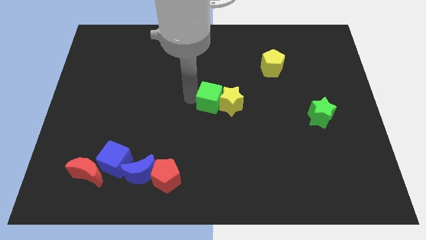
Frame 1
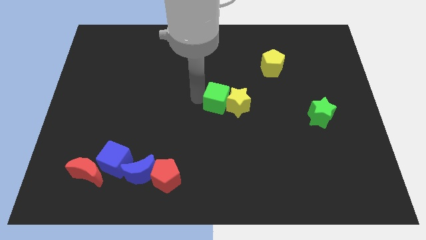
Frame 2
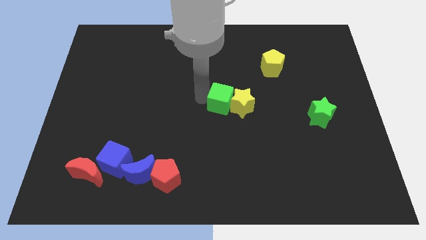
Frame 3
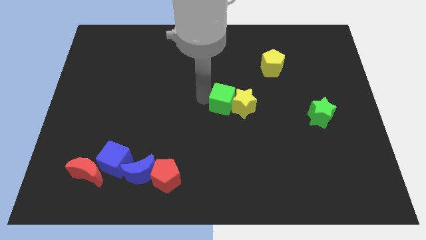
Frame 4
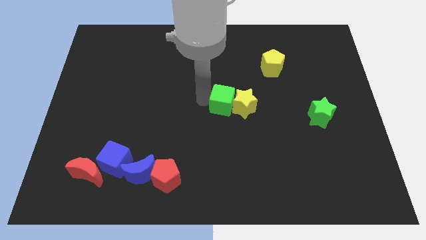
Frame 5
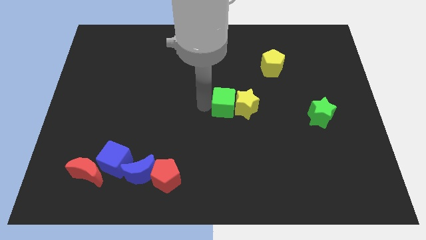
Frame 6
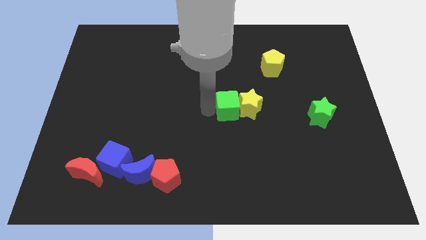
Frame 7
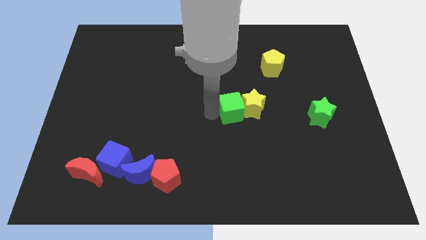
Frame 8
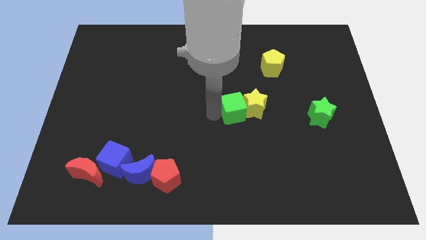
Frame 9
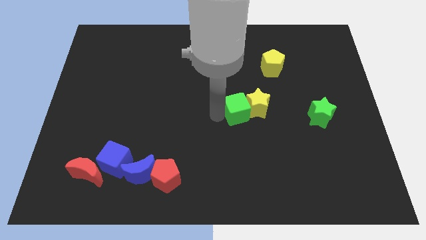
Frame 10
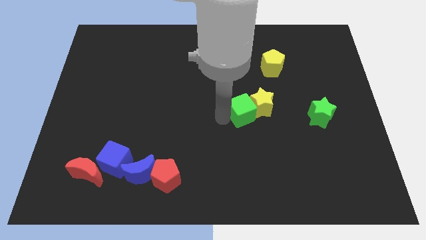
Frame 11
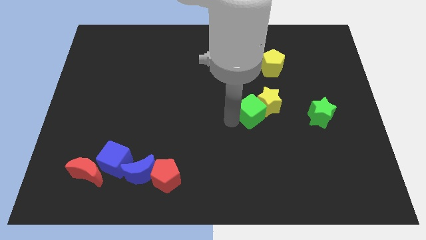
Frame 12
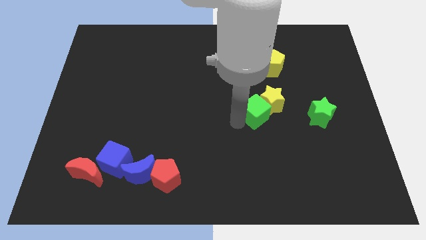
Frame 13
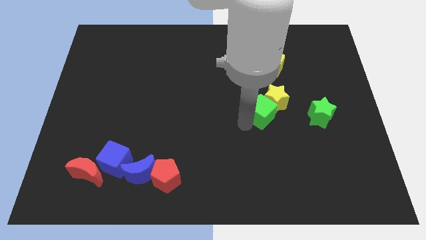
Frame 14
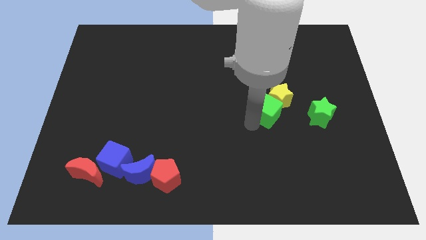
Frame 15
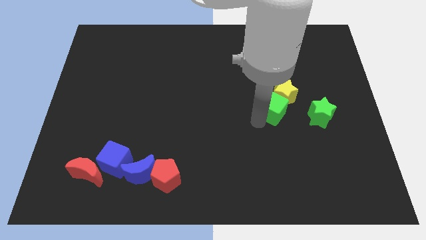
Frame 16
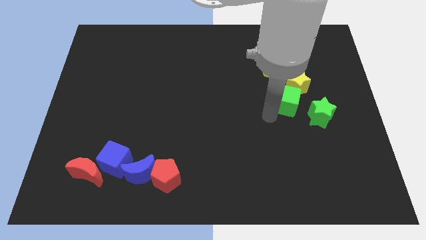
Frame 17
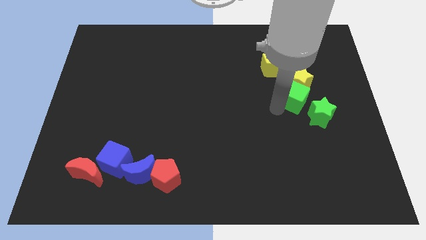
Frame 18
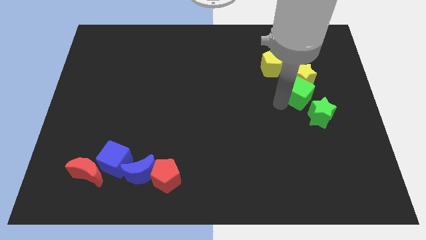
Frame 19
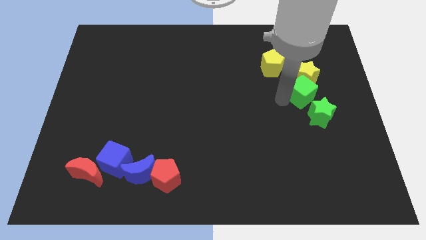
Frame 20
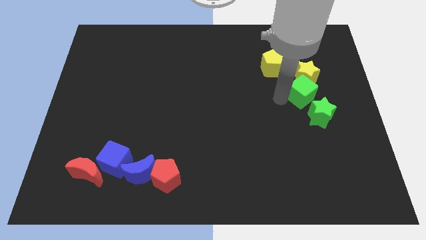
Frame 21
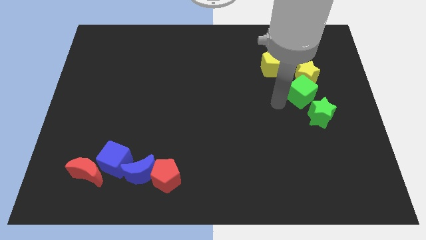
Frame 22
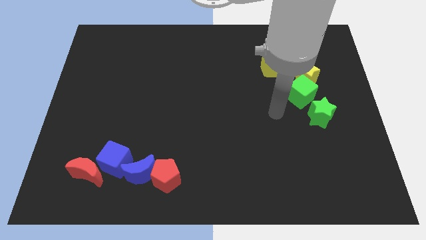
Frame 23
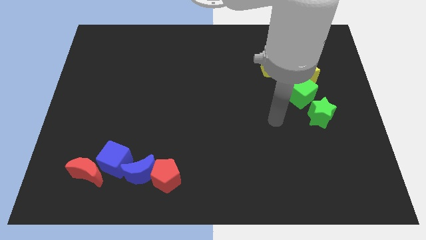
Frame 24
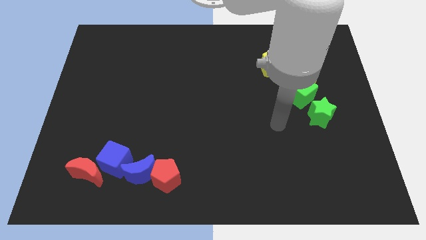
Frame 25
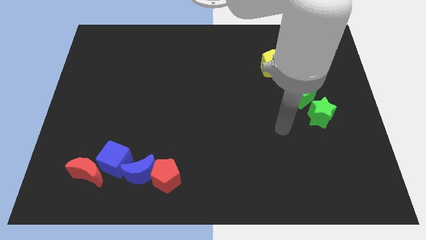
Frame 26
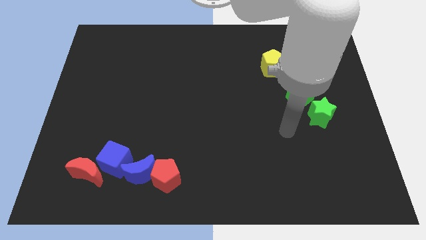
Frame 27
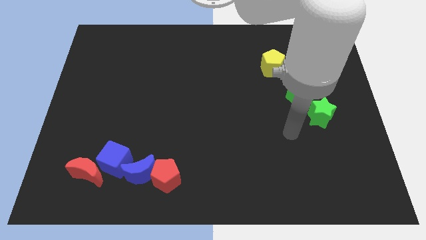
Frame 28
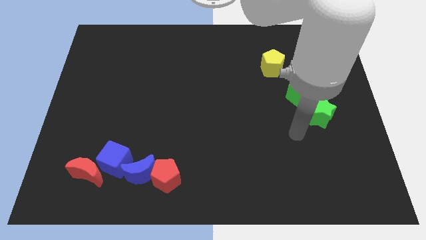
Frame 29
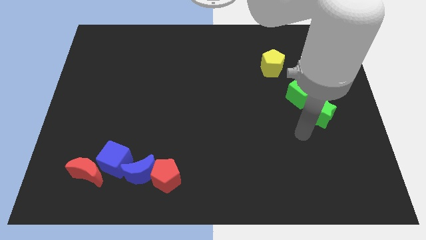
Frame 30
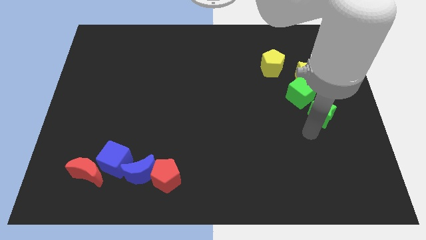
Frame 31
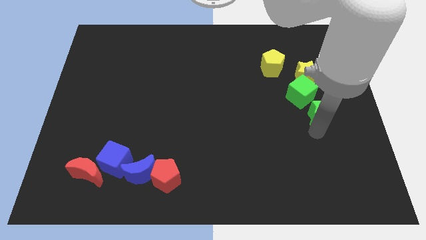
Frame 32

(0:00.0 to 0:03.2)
drag the yellow star with green cube to the right of yellow pentagon

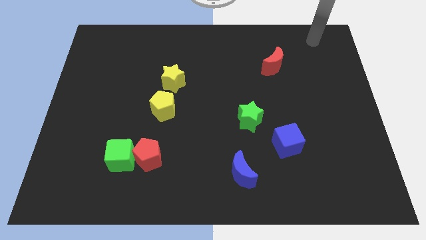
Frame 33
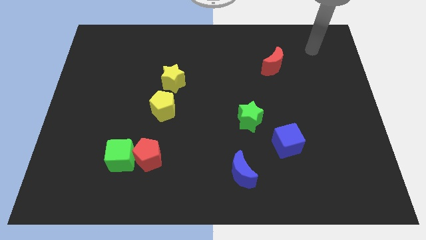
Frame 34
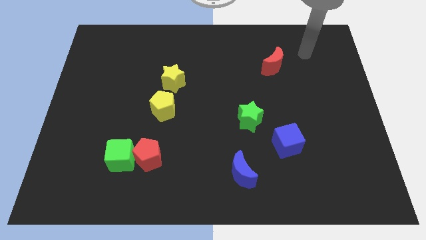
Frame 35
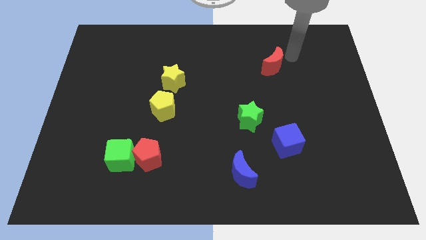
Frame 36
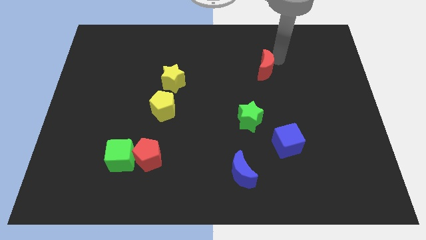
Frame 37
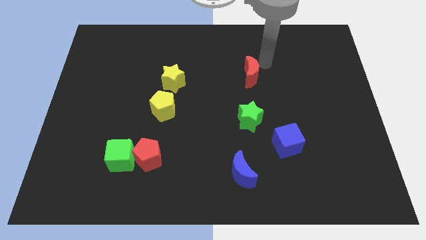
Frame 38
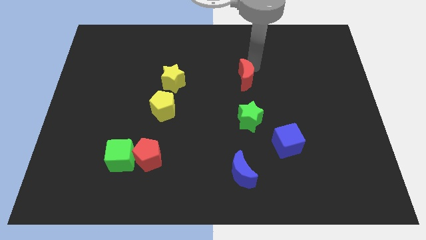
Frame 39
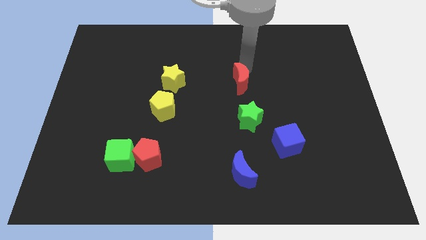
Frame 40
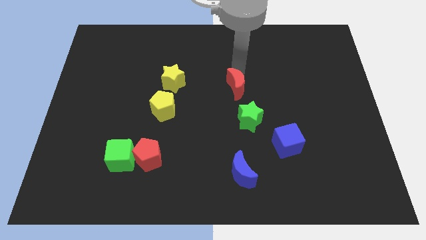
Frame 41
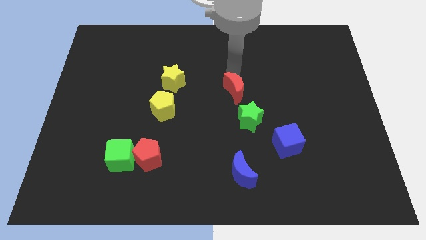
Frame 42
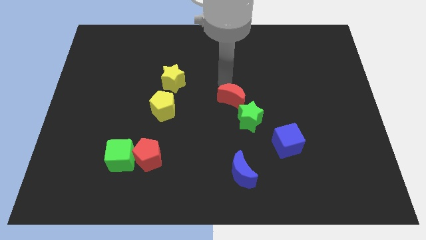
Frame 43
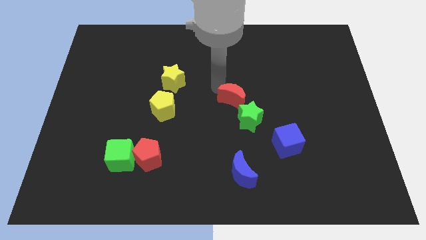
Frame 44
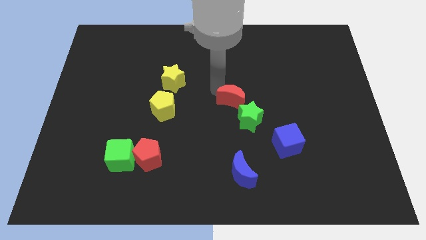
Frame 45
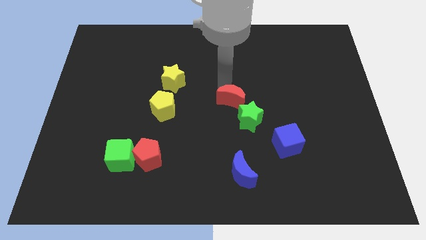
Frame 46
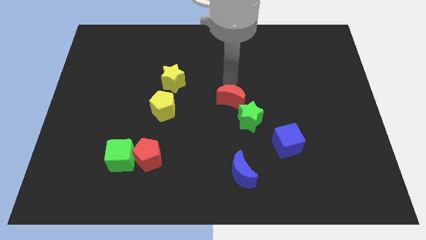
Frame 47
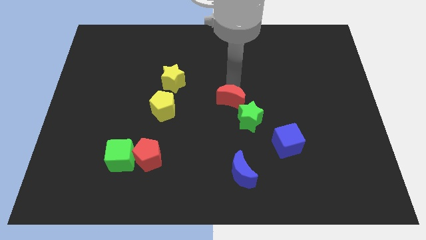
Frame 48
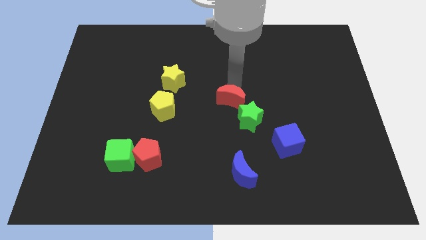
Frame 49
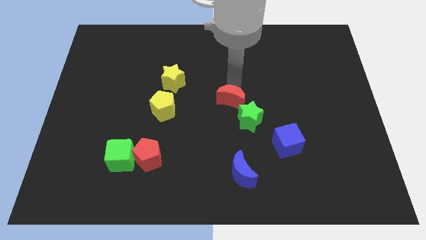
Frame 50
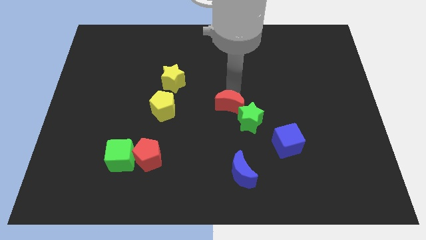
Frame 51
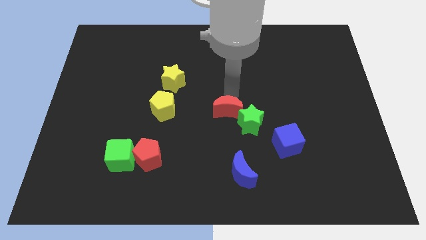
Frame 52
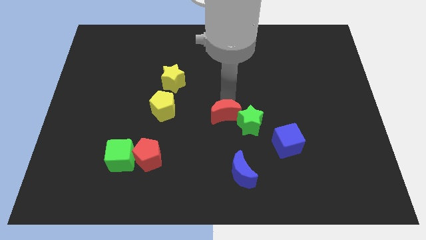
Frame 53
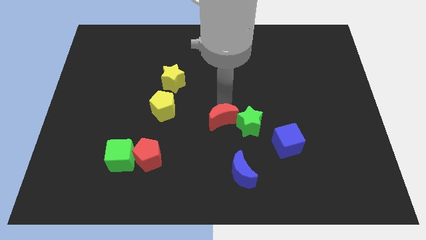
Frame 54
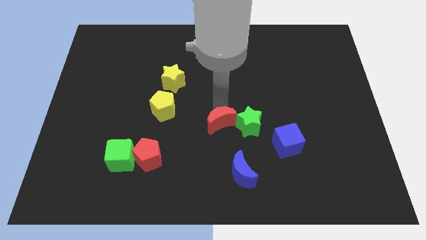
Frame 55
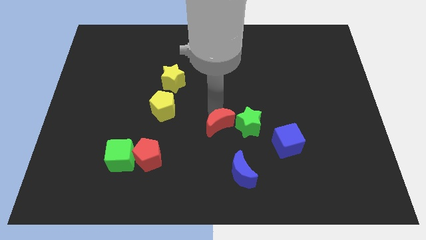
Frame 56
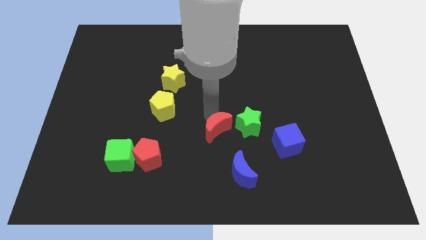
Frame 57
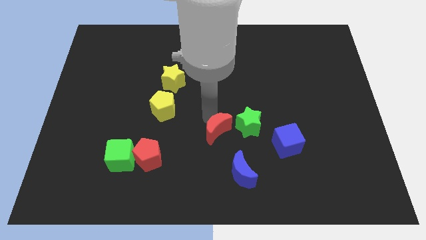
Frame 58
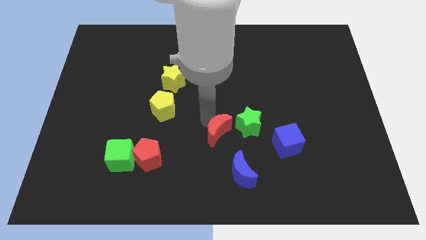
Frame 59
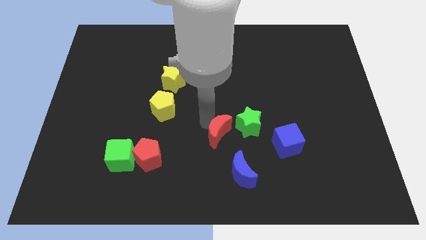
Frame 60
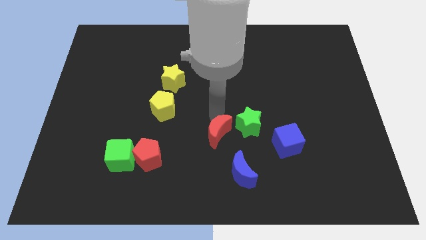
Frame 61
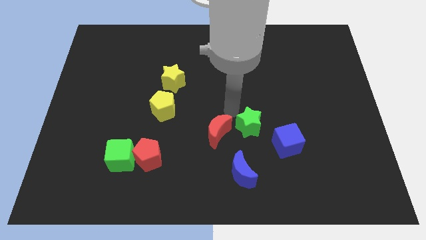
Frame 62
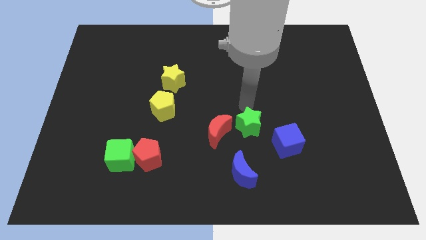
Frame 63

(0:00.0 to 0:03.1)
place the red moon above the blue moon

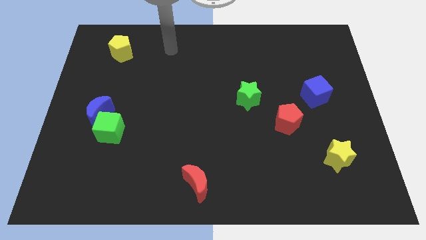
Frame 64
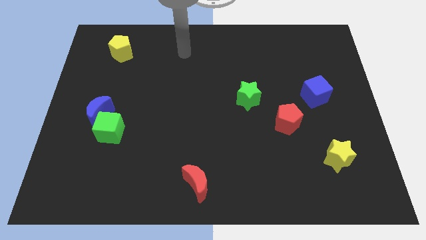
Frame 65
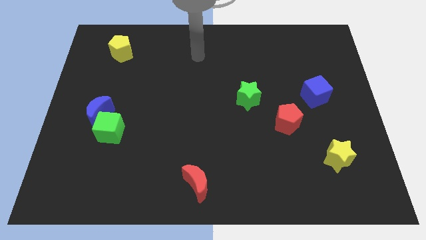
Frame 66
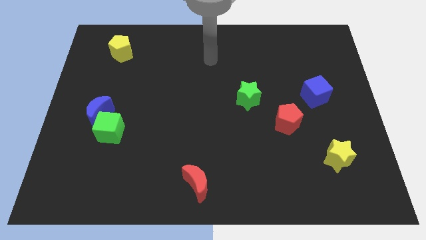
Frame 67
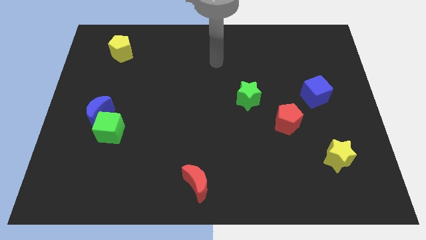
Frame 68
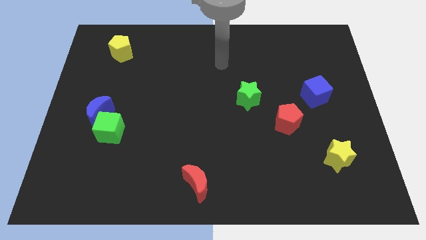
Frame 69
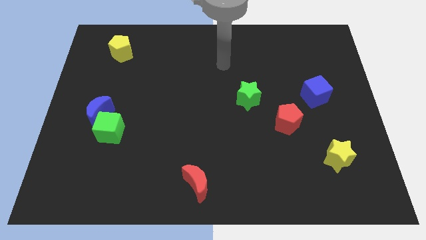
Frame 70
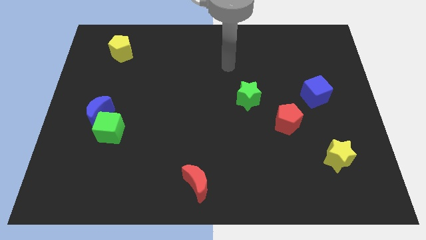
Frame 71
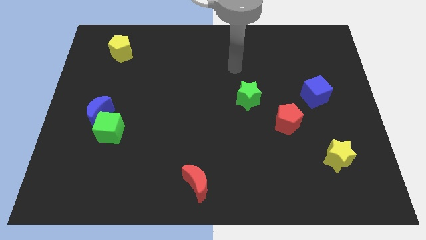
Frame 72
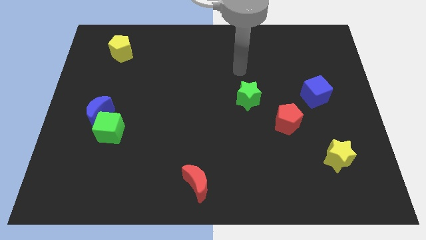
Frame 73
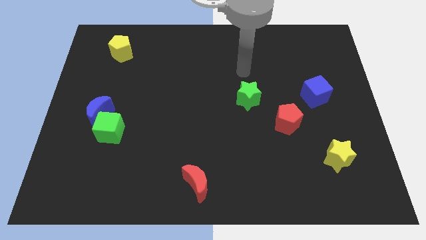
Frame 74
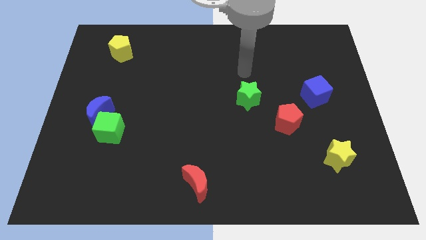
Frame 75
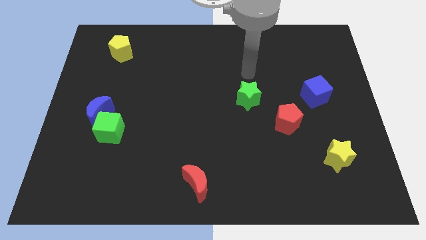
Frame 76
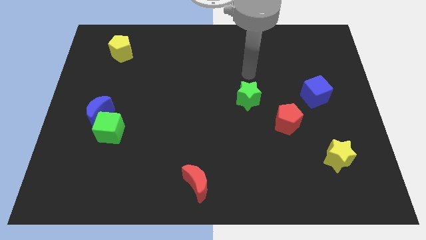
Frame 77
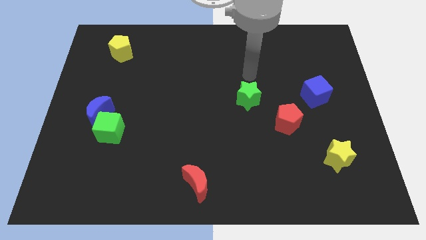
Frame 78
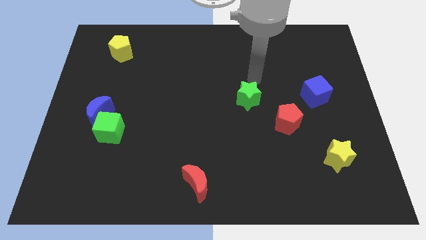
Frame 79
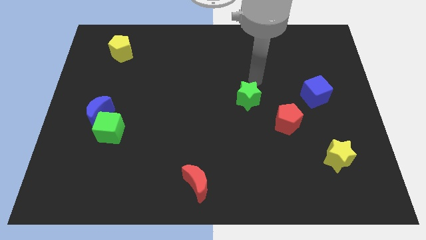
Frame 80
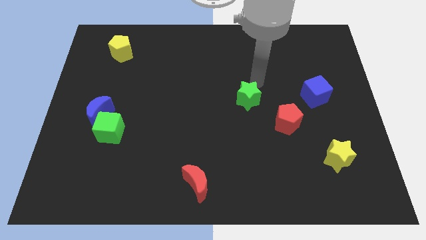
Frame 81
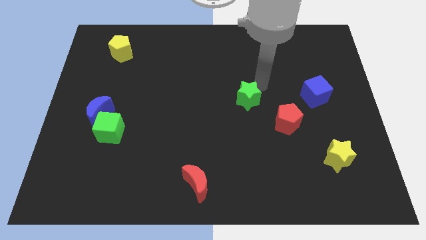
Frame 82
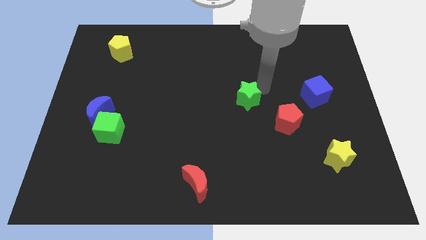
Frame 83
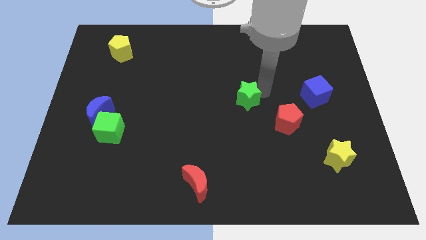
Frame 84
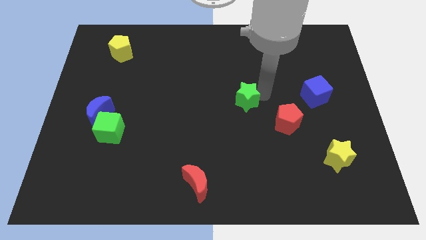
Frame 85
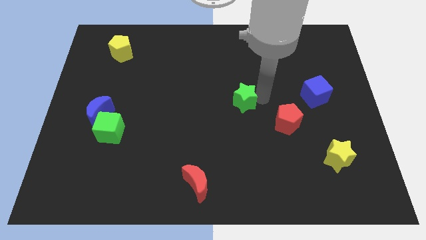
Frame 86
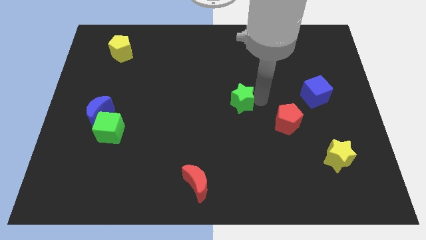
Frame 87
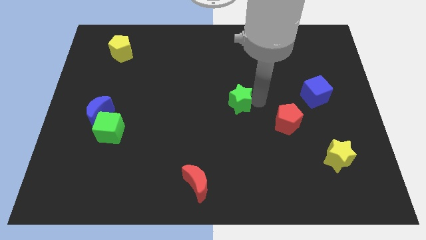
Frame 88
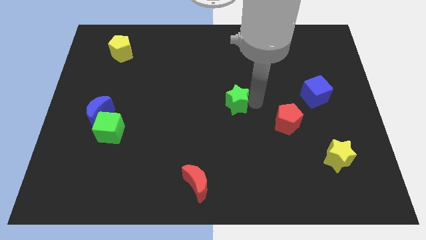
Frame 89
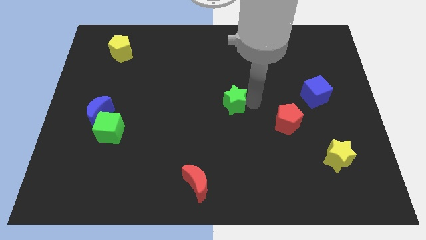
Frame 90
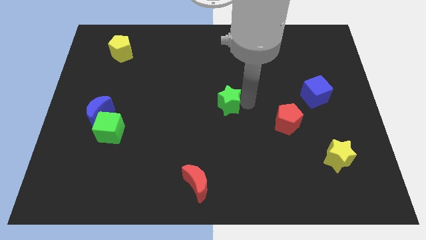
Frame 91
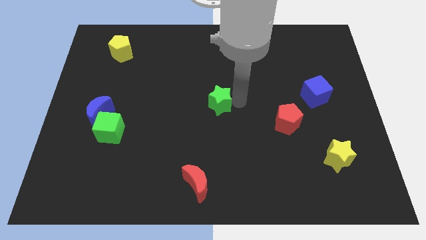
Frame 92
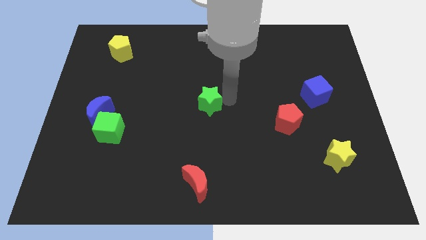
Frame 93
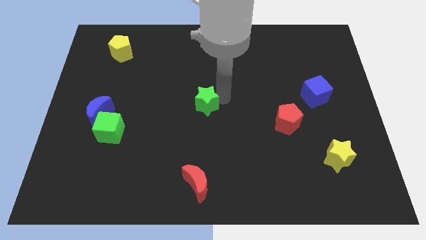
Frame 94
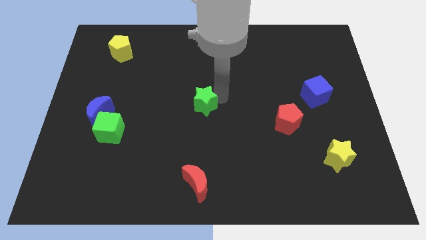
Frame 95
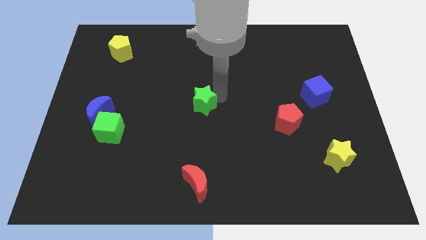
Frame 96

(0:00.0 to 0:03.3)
place the green star at the center of the board
